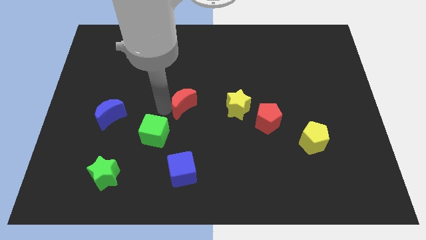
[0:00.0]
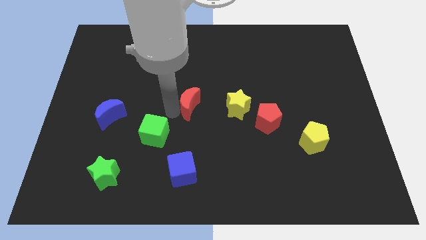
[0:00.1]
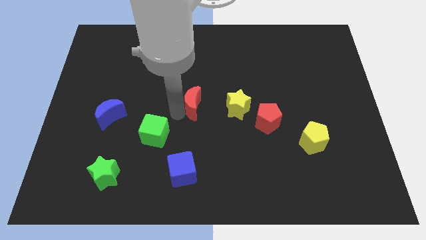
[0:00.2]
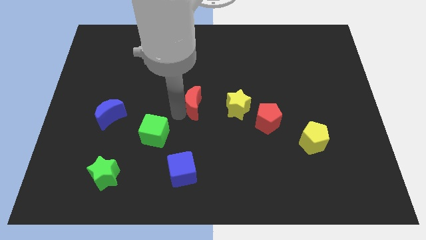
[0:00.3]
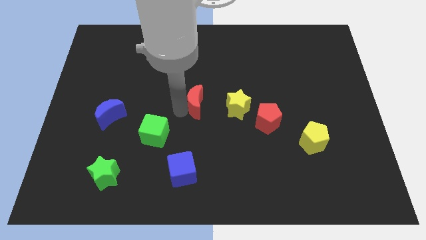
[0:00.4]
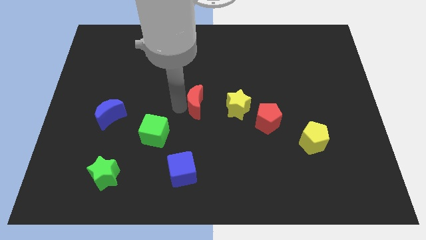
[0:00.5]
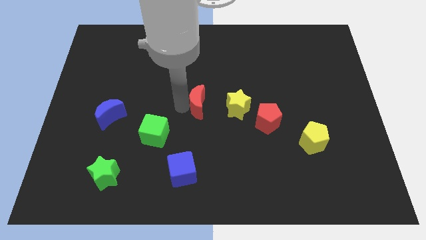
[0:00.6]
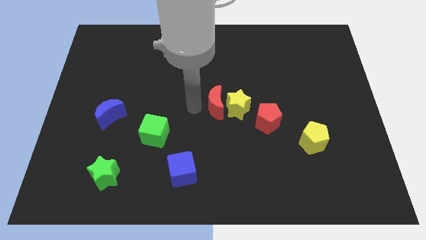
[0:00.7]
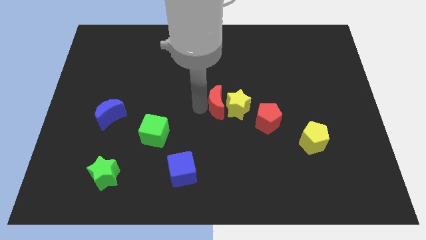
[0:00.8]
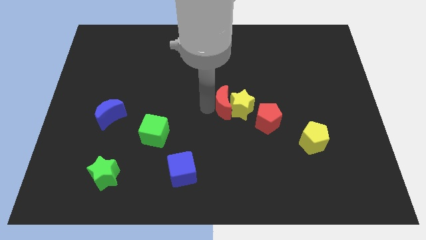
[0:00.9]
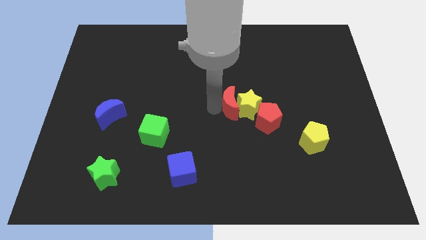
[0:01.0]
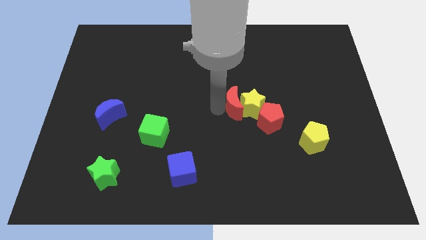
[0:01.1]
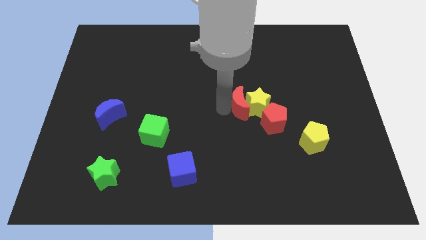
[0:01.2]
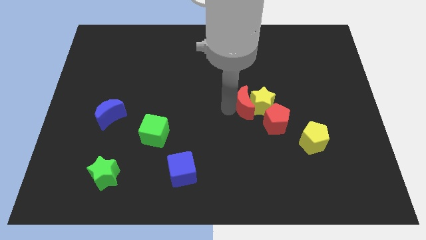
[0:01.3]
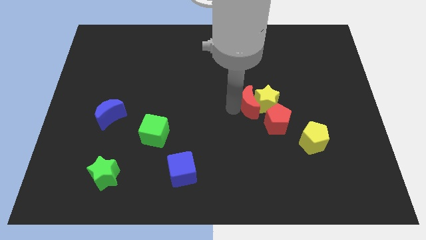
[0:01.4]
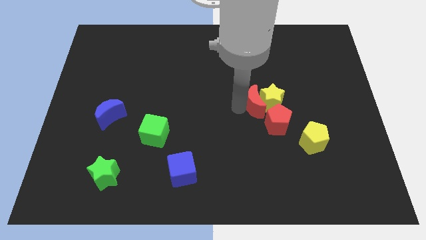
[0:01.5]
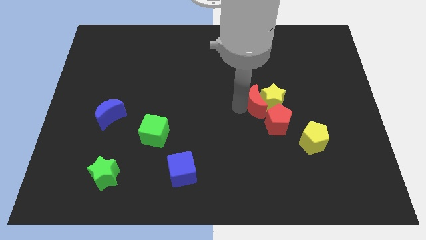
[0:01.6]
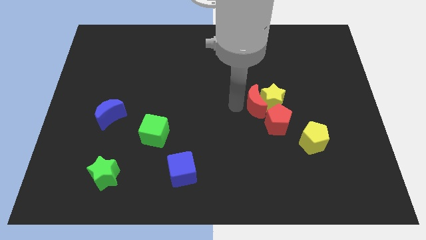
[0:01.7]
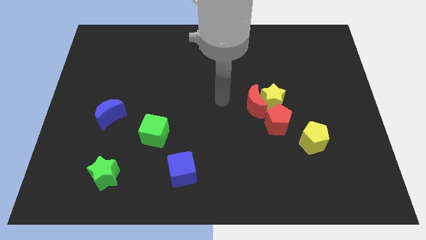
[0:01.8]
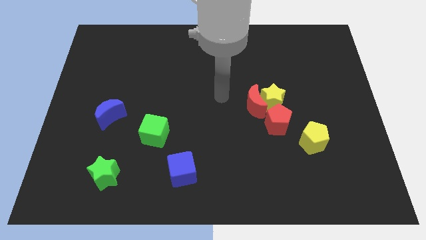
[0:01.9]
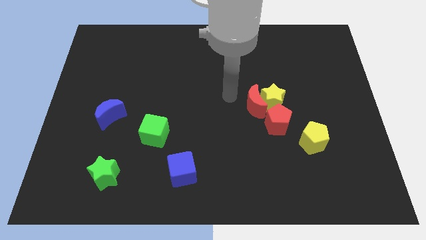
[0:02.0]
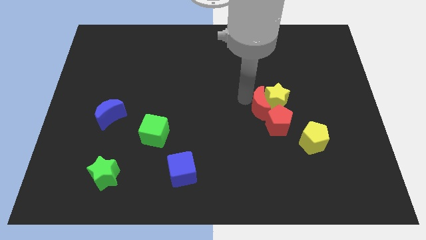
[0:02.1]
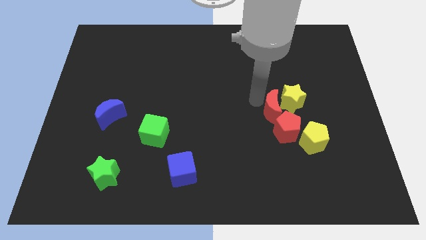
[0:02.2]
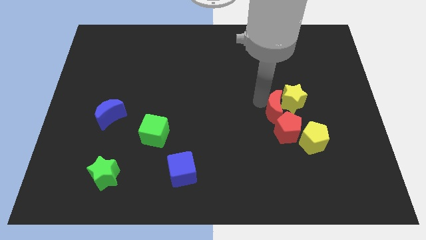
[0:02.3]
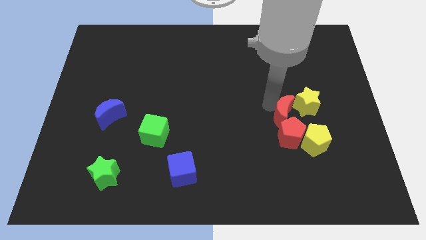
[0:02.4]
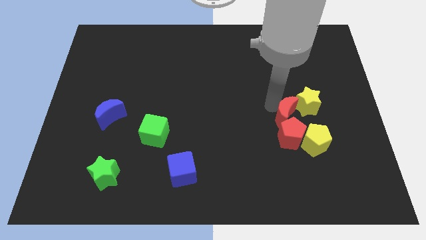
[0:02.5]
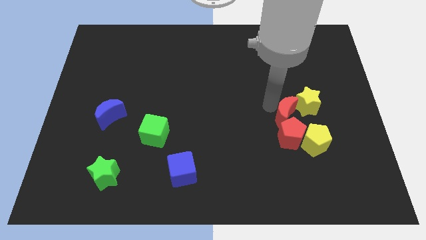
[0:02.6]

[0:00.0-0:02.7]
push the red moon into the yellow star

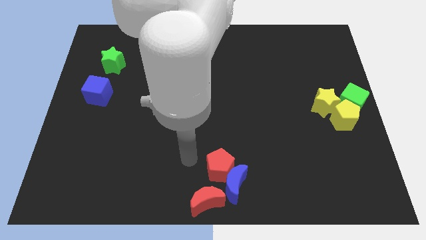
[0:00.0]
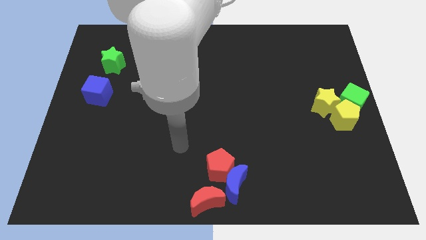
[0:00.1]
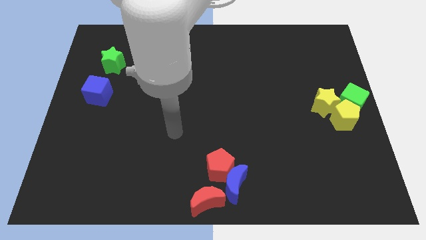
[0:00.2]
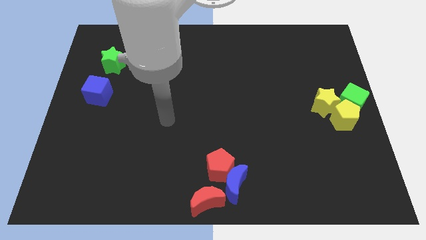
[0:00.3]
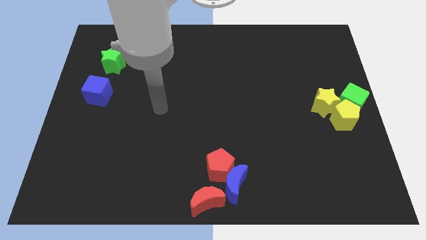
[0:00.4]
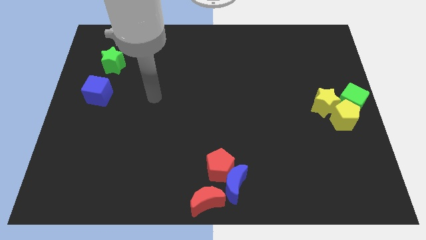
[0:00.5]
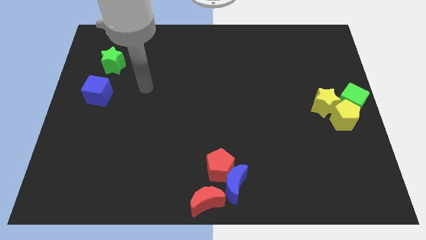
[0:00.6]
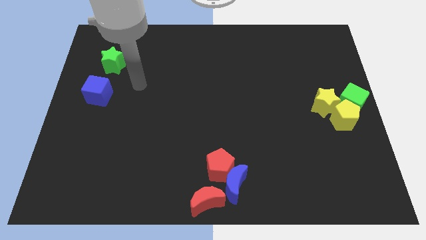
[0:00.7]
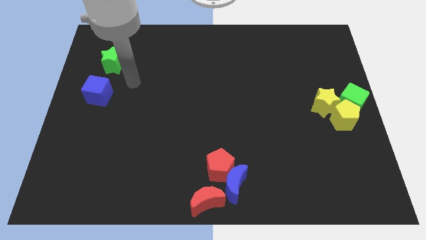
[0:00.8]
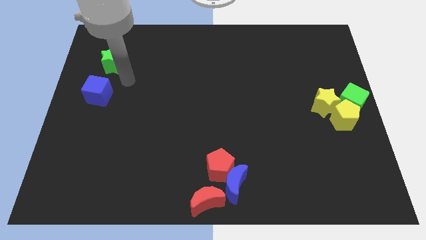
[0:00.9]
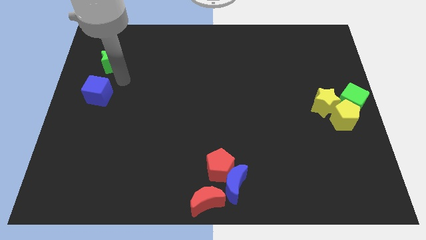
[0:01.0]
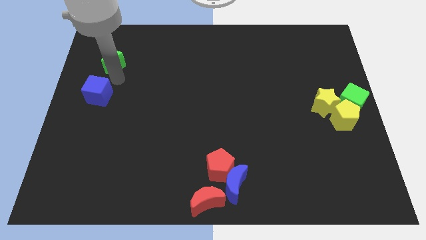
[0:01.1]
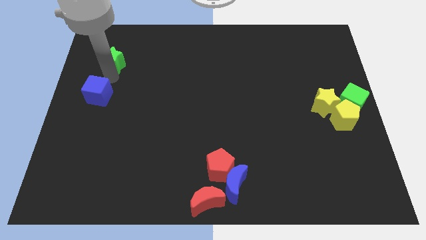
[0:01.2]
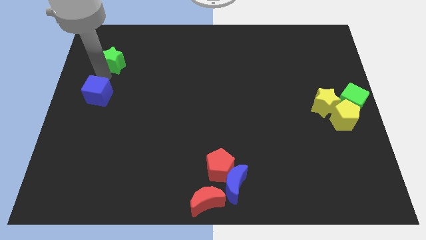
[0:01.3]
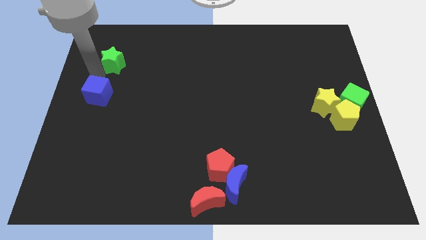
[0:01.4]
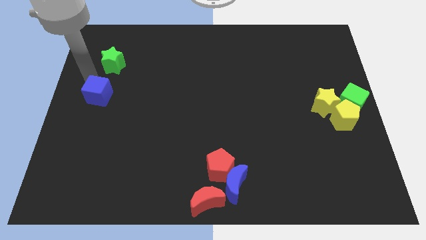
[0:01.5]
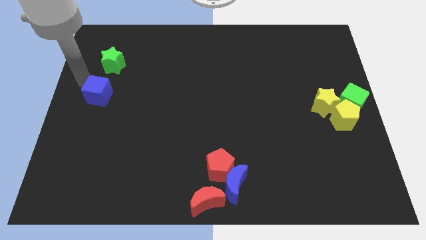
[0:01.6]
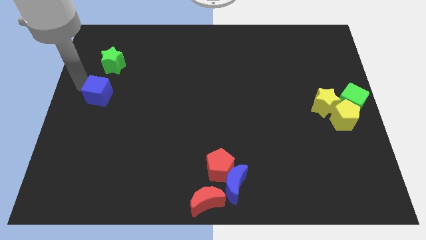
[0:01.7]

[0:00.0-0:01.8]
move your arm left to the blue cube

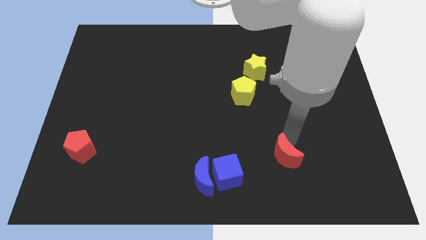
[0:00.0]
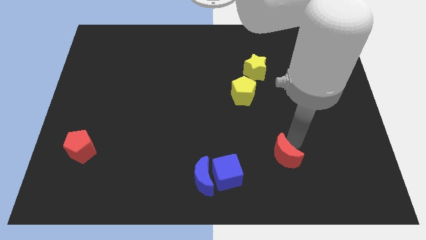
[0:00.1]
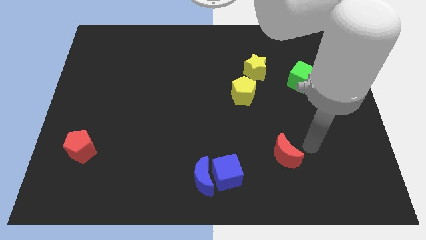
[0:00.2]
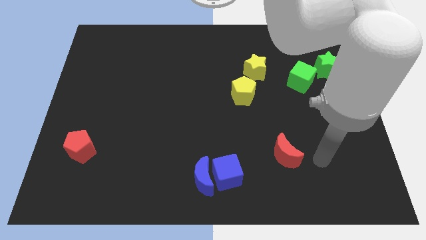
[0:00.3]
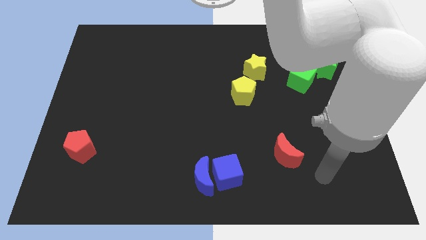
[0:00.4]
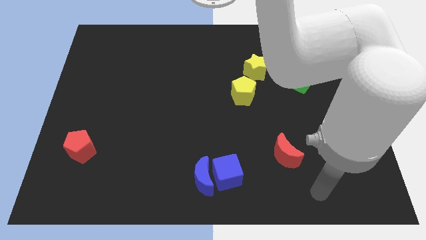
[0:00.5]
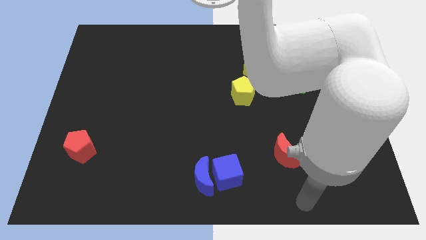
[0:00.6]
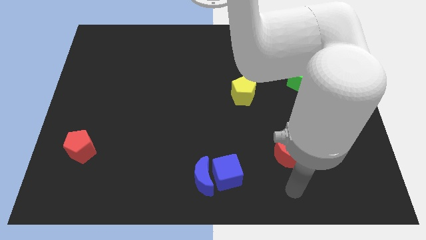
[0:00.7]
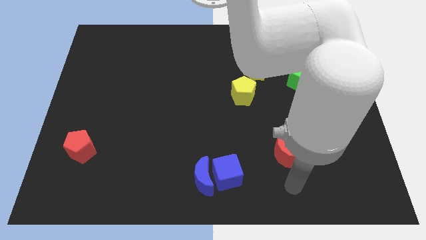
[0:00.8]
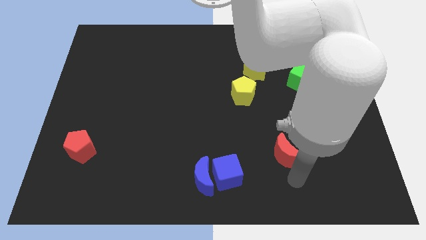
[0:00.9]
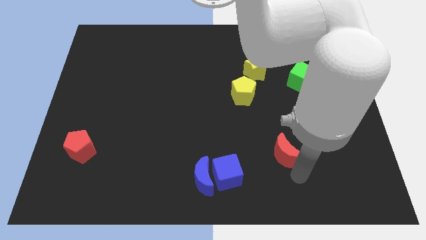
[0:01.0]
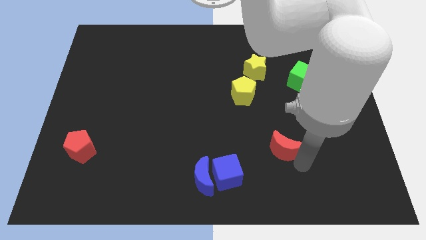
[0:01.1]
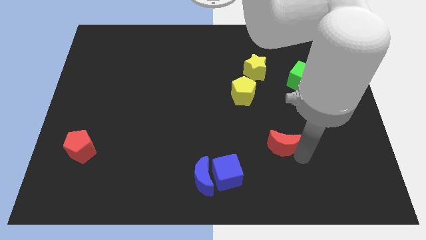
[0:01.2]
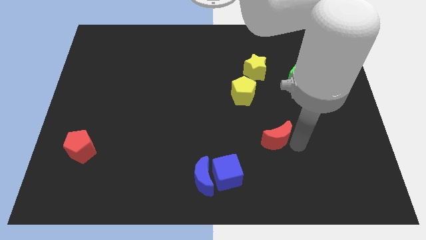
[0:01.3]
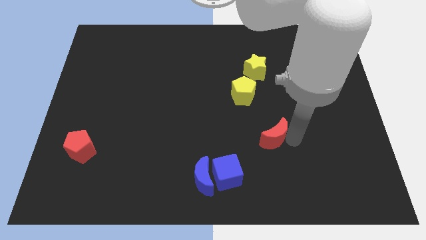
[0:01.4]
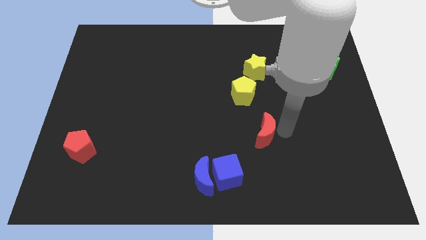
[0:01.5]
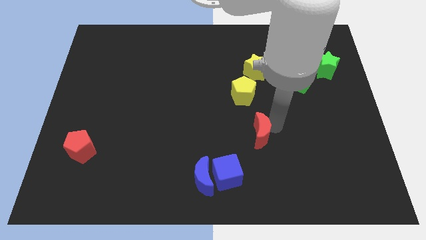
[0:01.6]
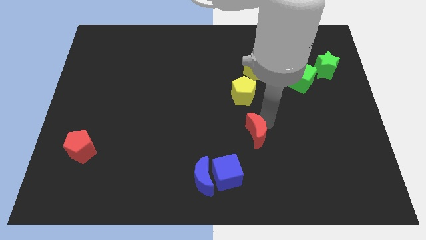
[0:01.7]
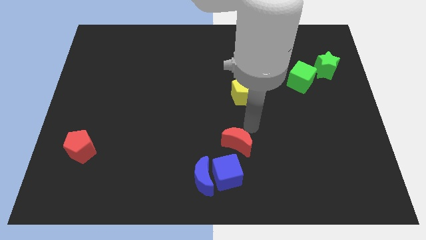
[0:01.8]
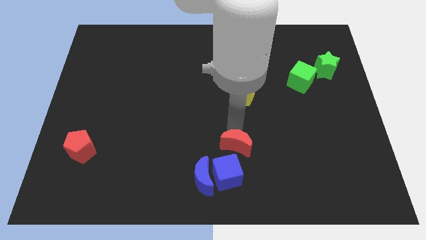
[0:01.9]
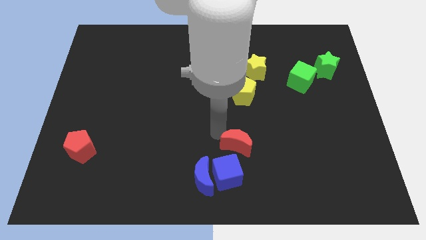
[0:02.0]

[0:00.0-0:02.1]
put the red moon above the blue cube

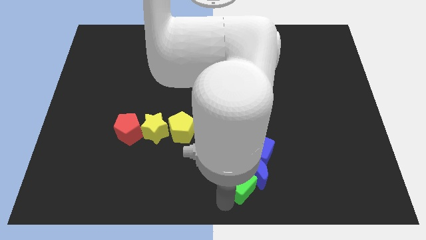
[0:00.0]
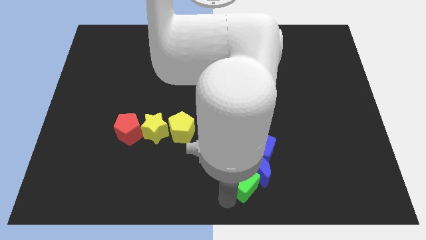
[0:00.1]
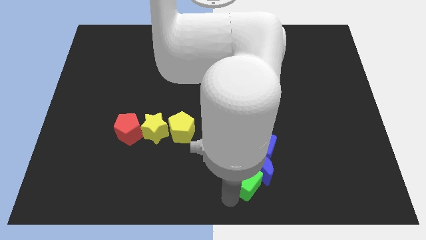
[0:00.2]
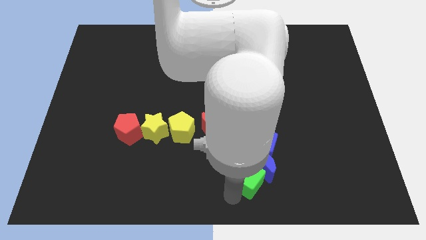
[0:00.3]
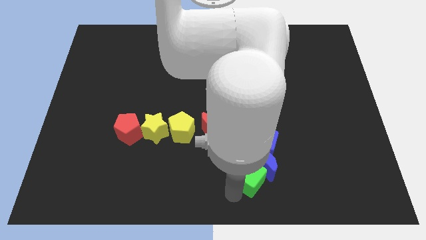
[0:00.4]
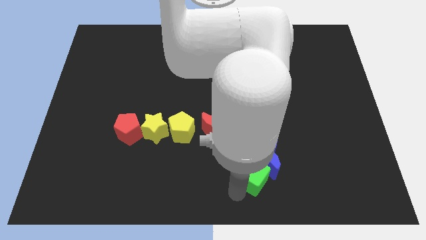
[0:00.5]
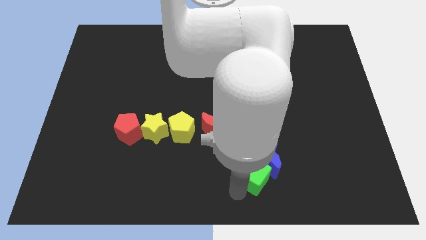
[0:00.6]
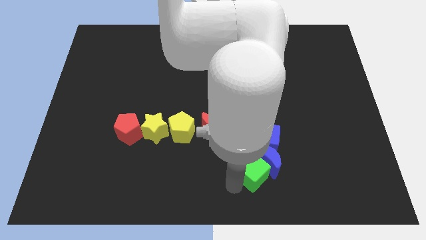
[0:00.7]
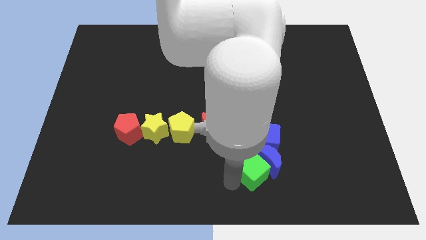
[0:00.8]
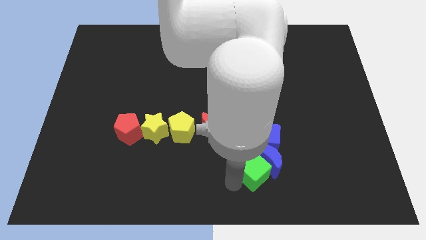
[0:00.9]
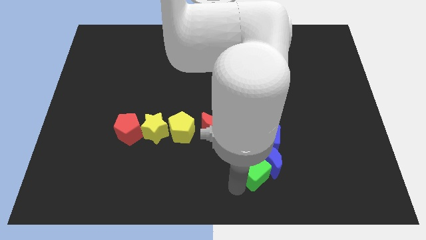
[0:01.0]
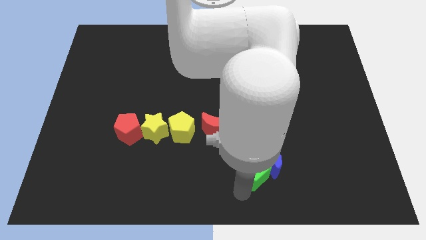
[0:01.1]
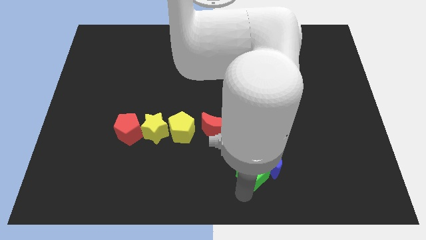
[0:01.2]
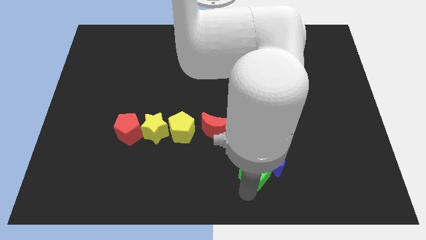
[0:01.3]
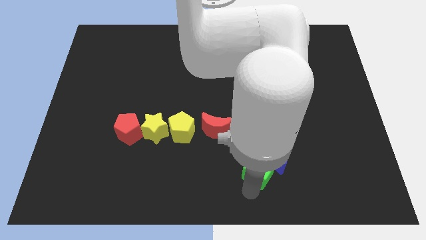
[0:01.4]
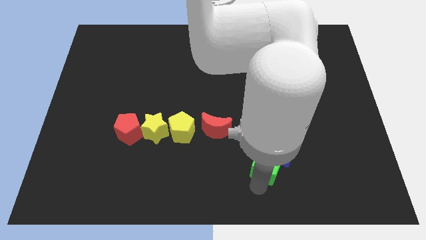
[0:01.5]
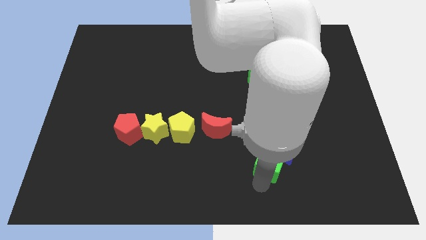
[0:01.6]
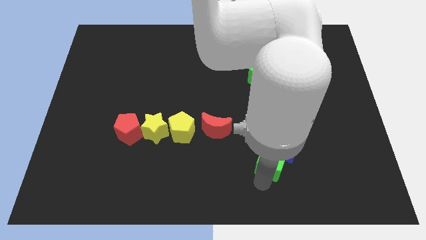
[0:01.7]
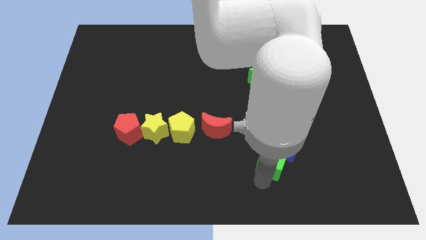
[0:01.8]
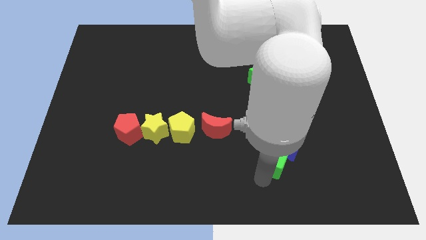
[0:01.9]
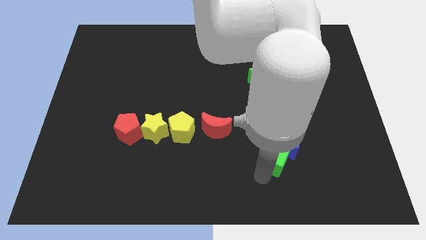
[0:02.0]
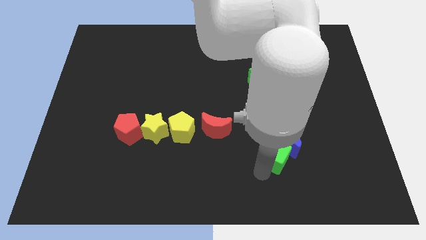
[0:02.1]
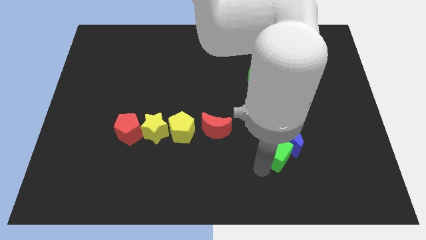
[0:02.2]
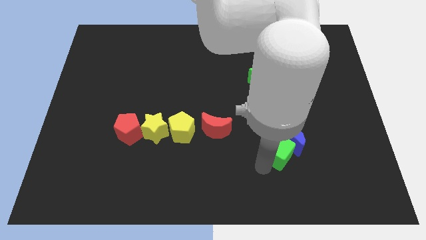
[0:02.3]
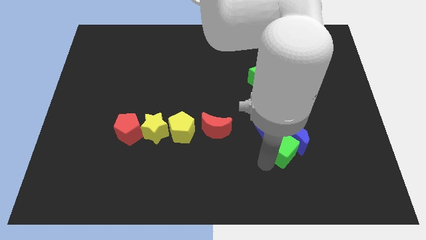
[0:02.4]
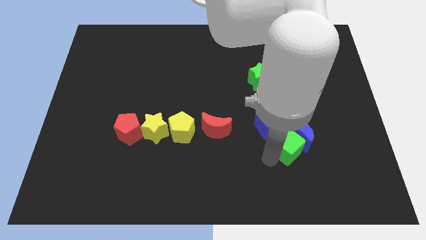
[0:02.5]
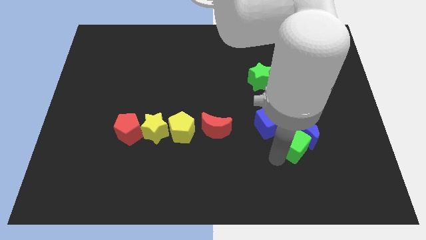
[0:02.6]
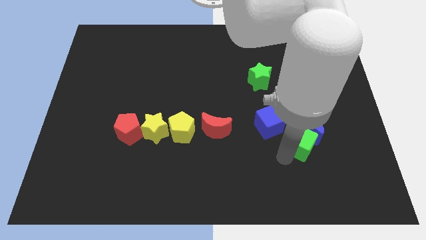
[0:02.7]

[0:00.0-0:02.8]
move green cube and blue moon slightly up
